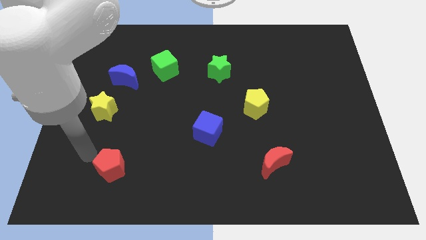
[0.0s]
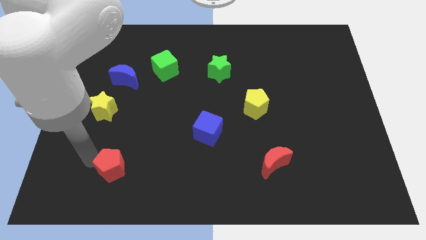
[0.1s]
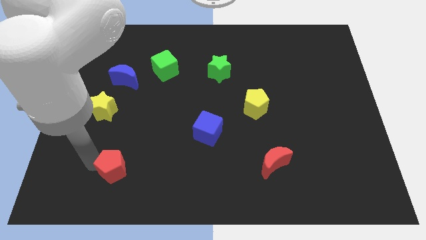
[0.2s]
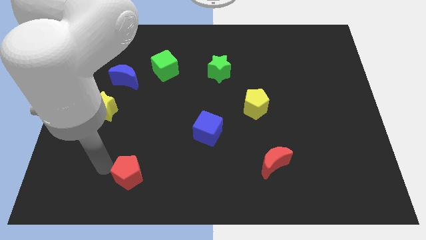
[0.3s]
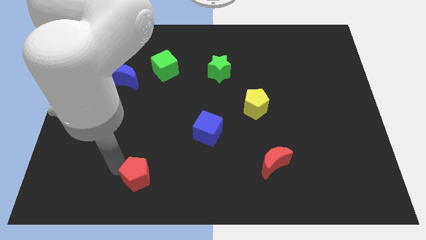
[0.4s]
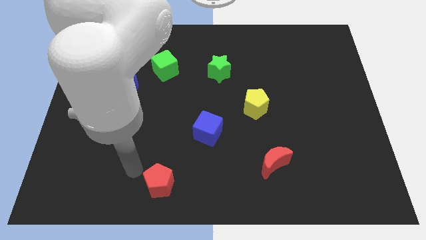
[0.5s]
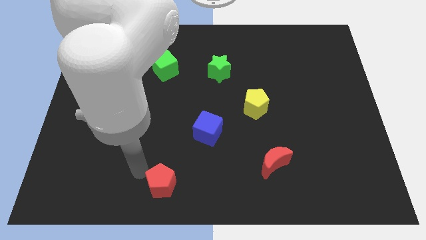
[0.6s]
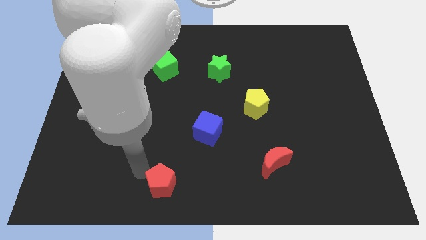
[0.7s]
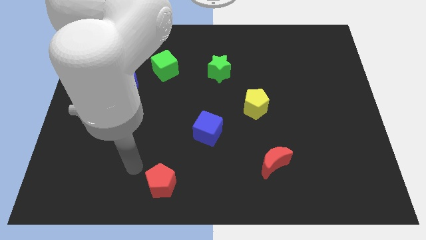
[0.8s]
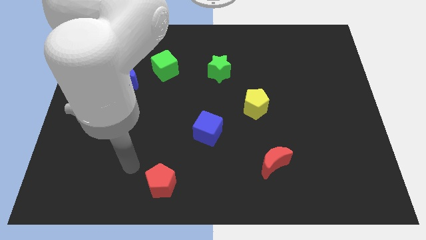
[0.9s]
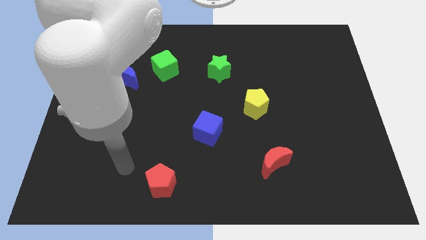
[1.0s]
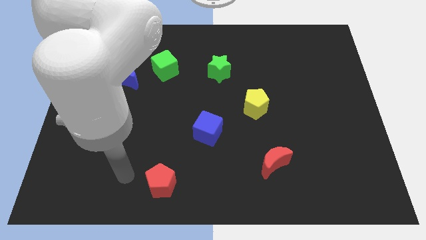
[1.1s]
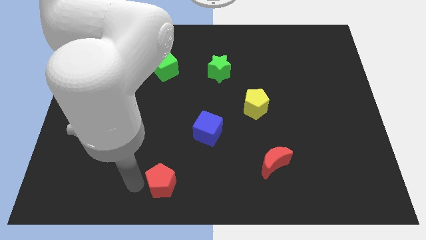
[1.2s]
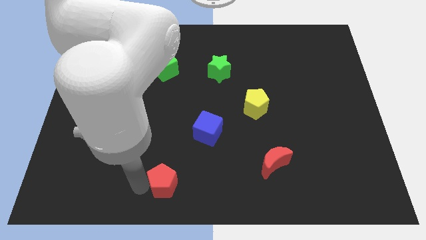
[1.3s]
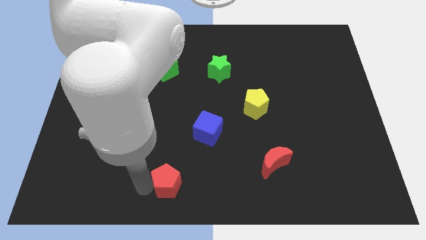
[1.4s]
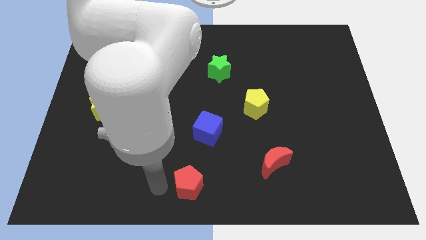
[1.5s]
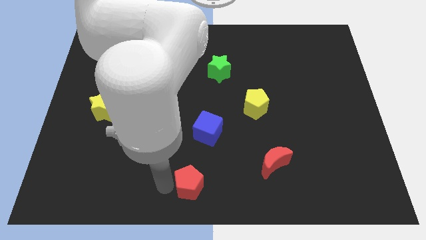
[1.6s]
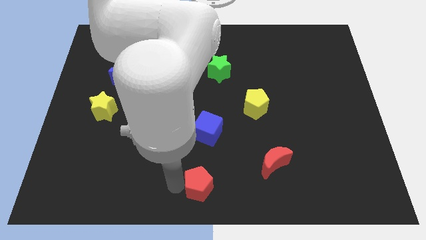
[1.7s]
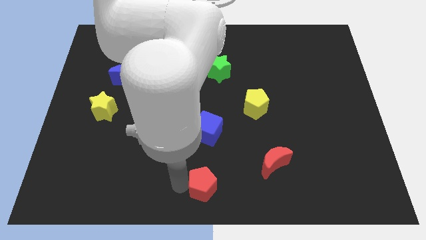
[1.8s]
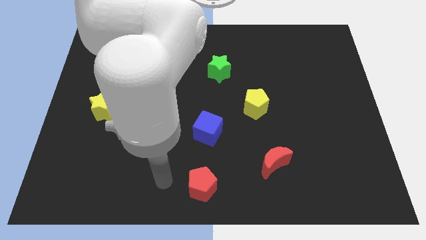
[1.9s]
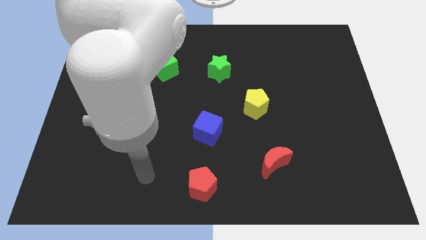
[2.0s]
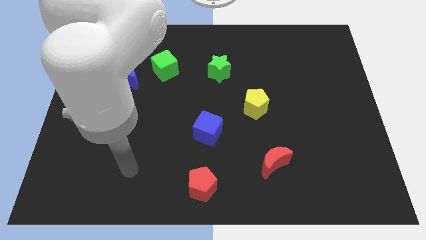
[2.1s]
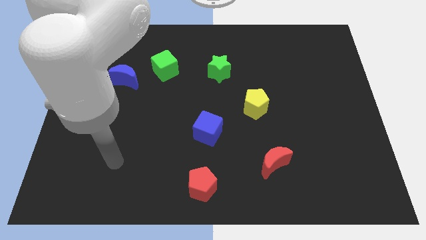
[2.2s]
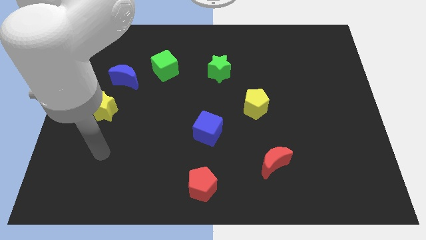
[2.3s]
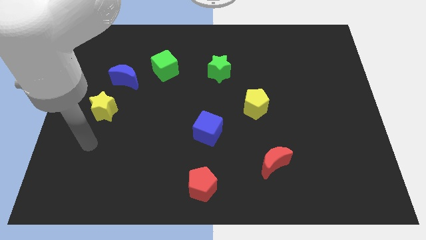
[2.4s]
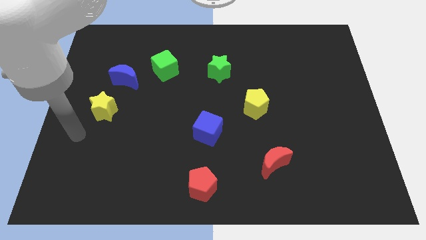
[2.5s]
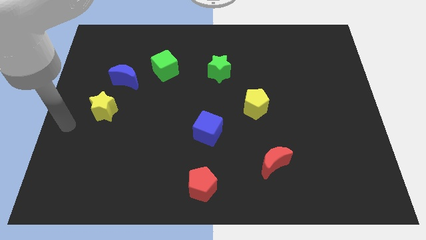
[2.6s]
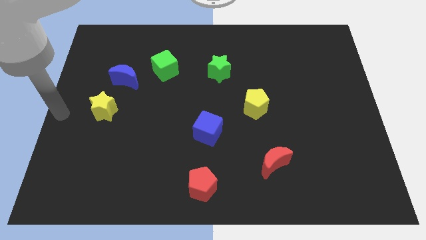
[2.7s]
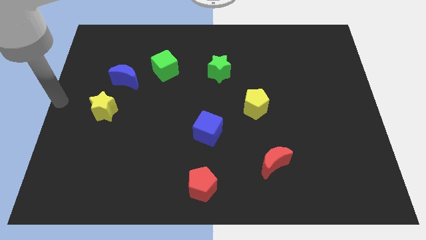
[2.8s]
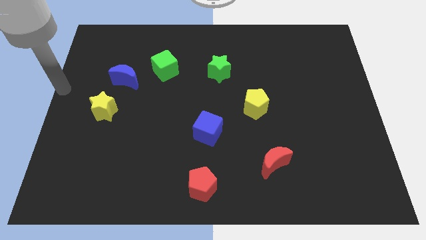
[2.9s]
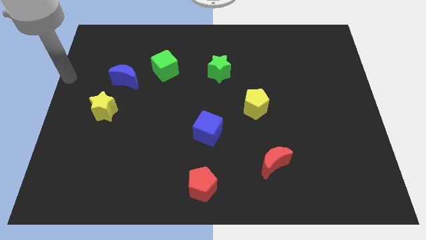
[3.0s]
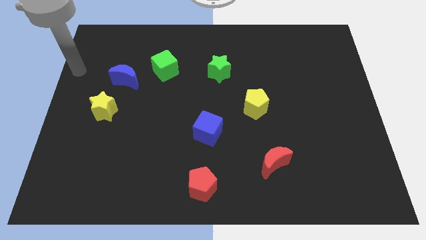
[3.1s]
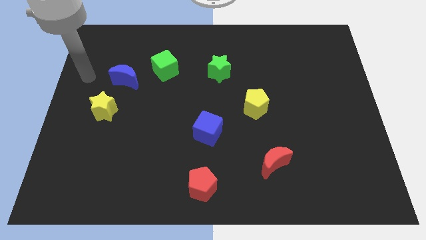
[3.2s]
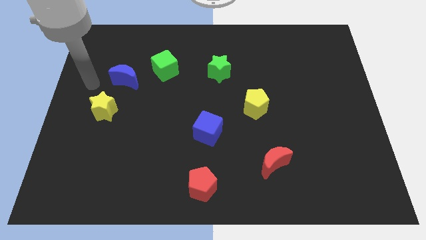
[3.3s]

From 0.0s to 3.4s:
push the red pentagon below the blue cube

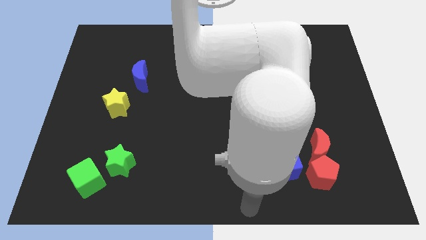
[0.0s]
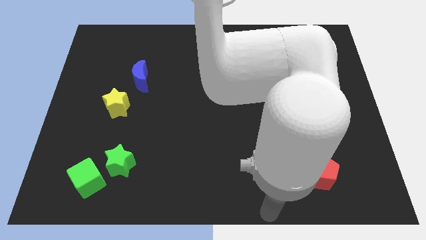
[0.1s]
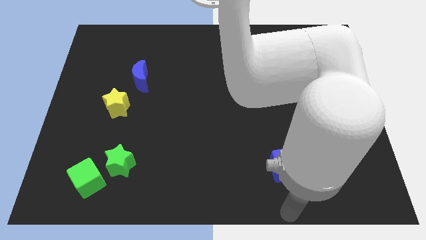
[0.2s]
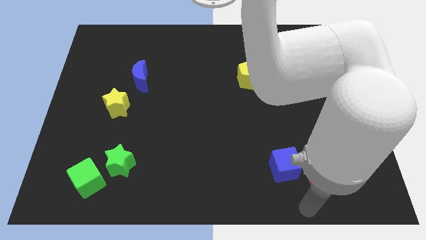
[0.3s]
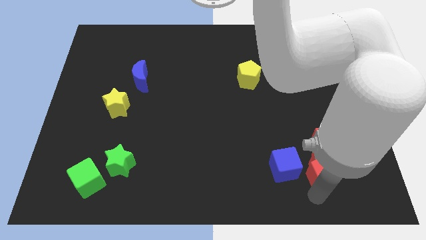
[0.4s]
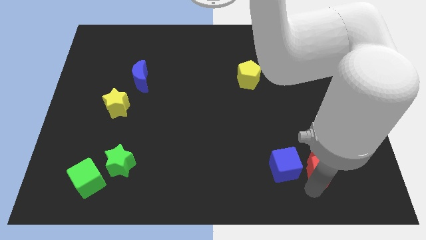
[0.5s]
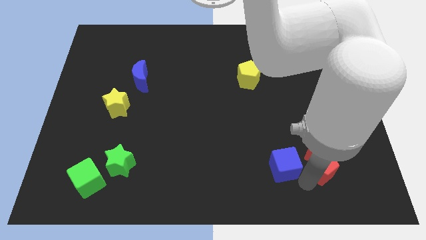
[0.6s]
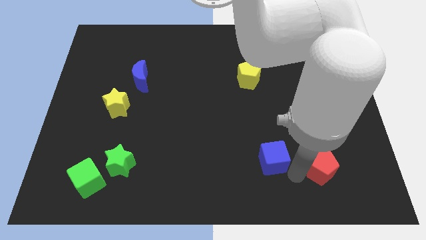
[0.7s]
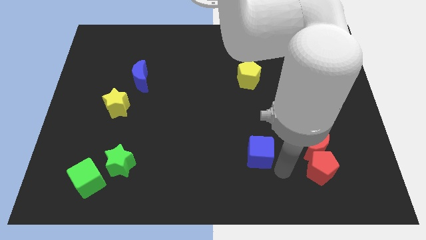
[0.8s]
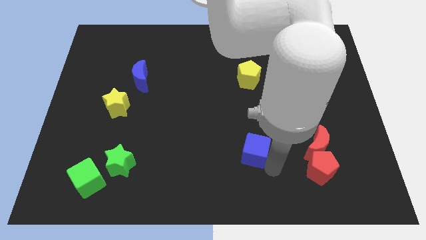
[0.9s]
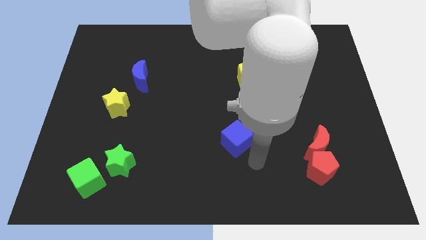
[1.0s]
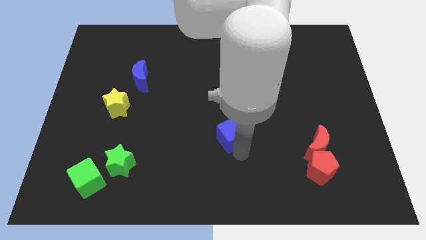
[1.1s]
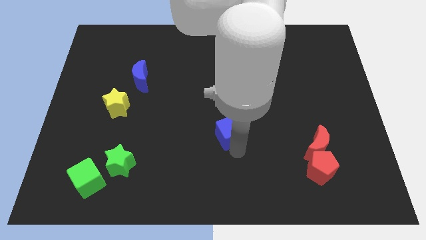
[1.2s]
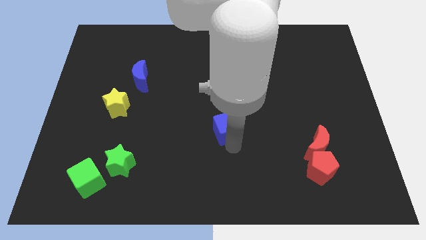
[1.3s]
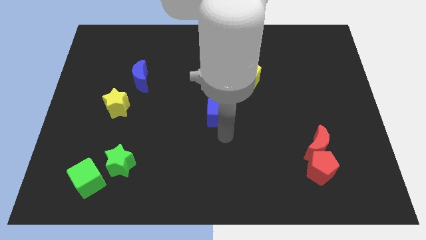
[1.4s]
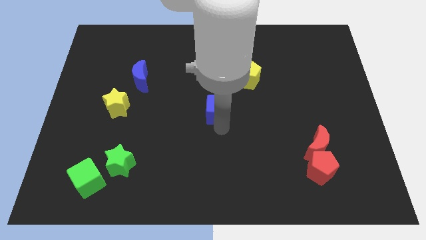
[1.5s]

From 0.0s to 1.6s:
slide the blue cube towards center

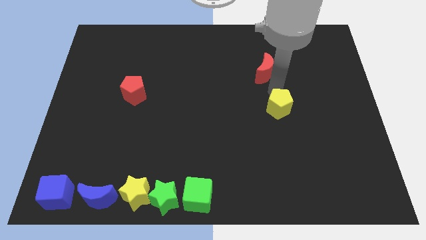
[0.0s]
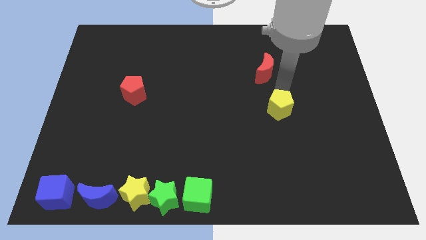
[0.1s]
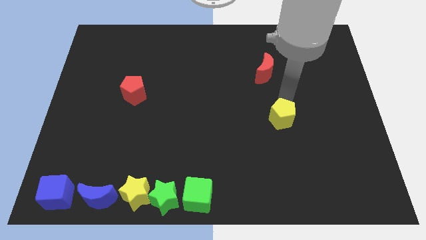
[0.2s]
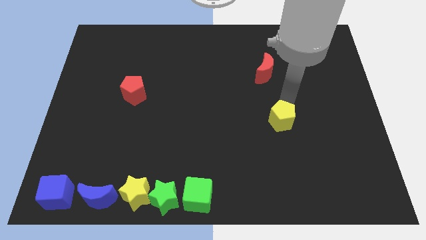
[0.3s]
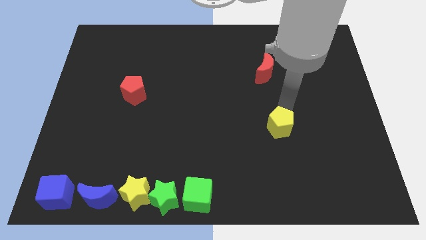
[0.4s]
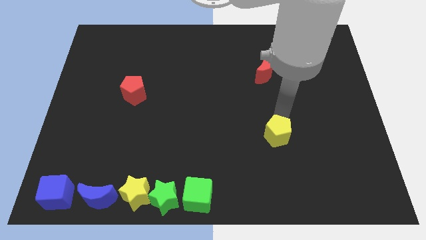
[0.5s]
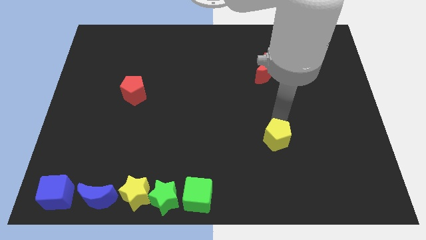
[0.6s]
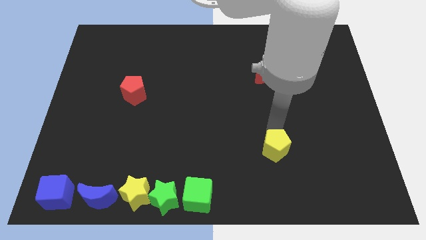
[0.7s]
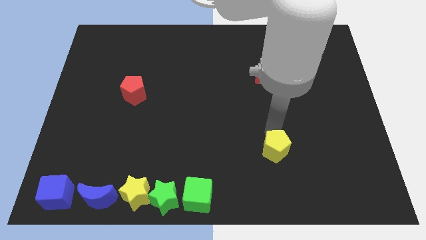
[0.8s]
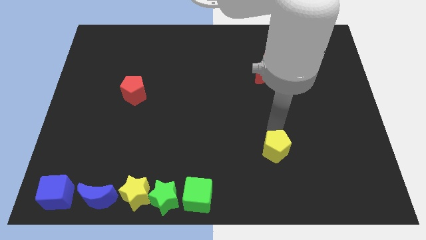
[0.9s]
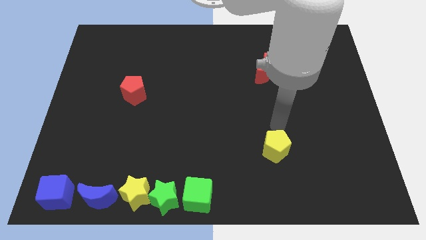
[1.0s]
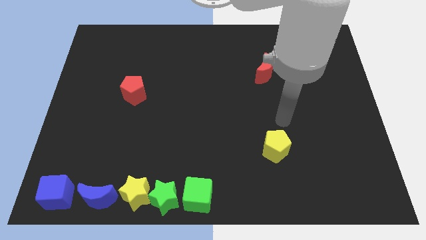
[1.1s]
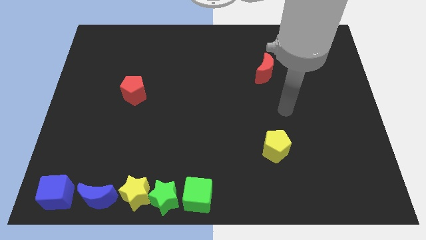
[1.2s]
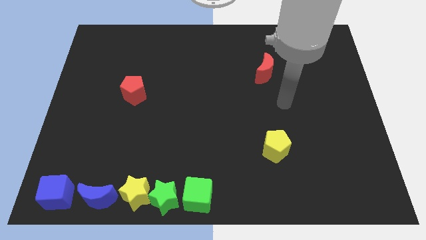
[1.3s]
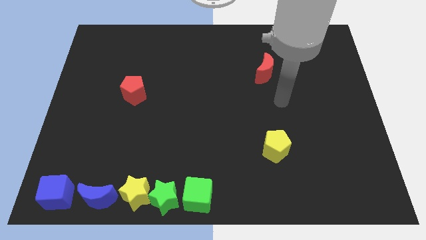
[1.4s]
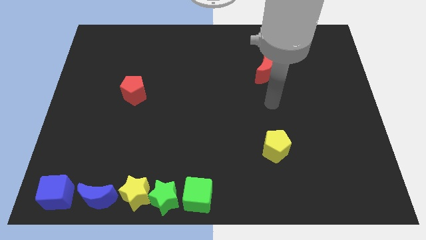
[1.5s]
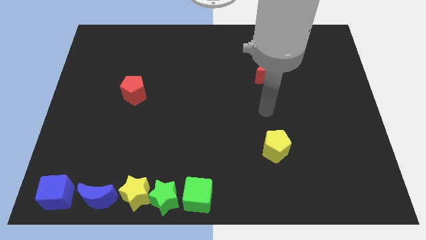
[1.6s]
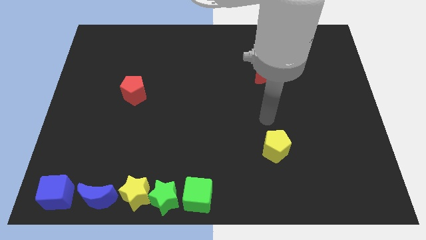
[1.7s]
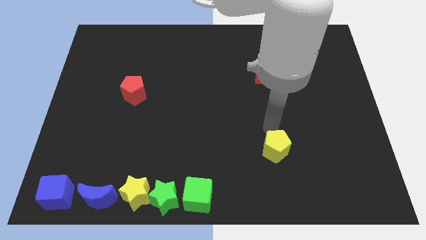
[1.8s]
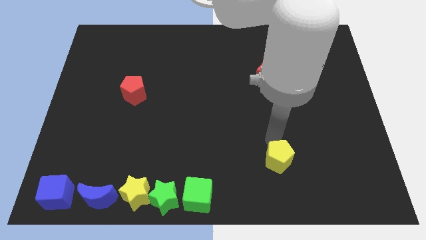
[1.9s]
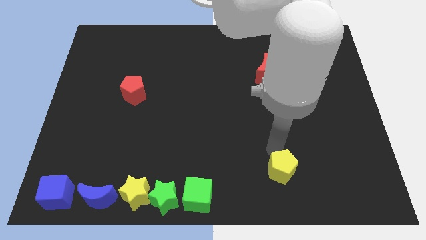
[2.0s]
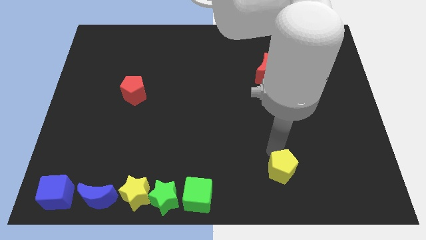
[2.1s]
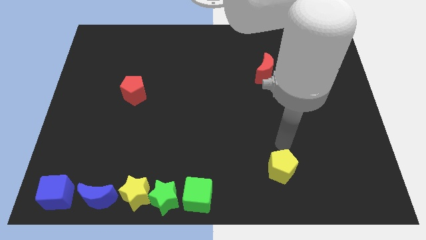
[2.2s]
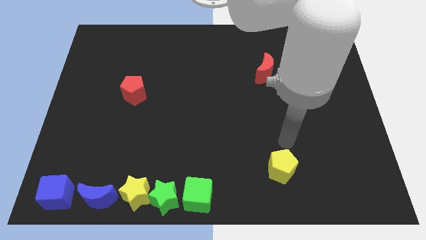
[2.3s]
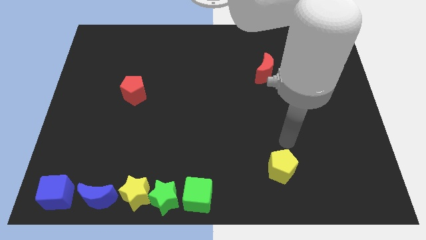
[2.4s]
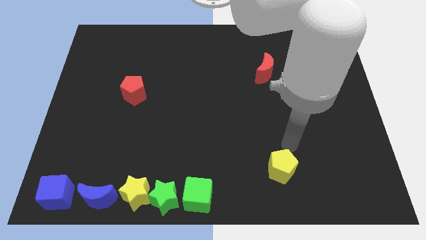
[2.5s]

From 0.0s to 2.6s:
push the yellow pentagon towards the bottom

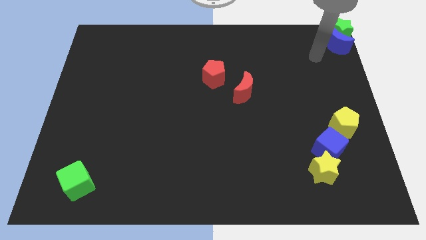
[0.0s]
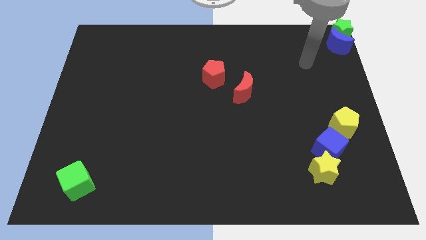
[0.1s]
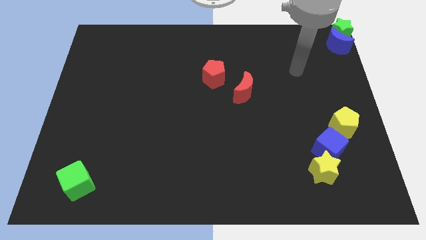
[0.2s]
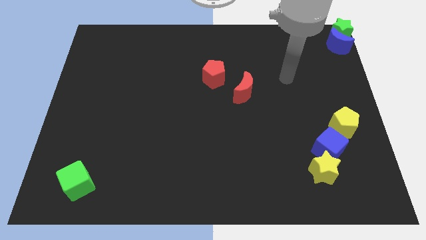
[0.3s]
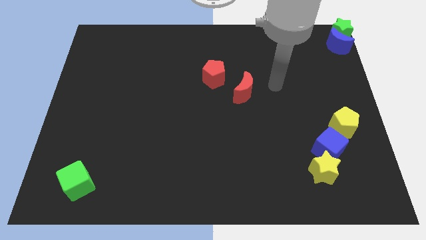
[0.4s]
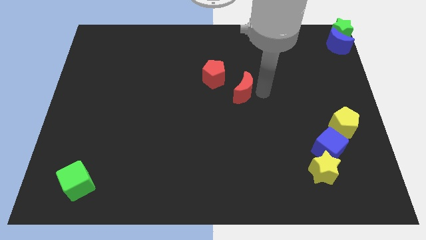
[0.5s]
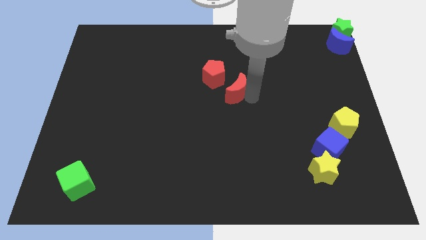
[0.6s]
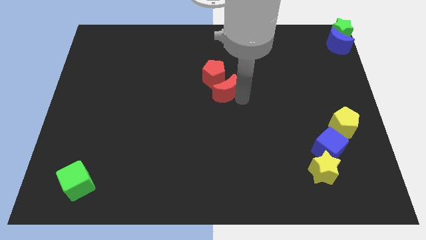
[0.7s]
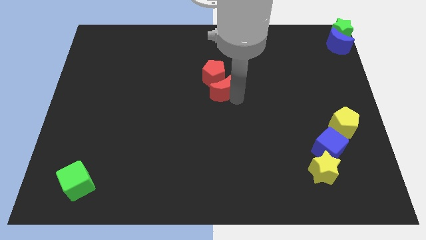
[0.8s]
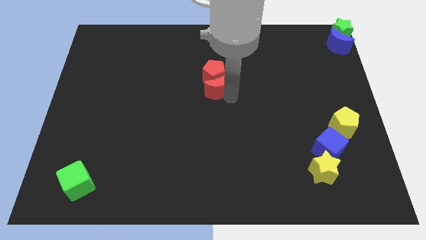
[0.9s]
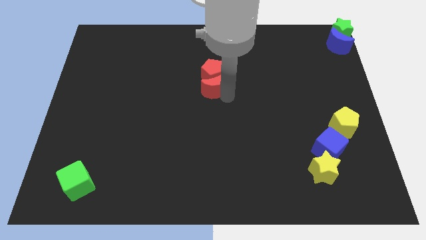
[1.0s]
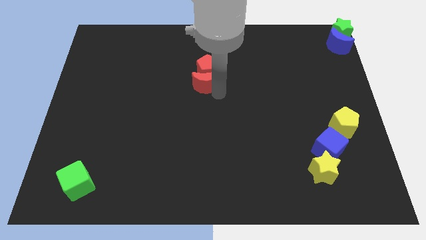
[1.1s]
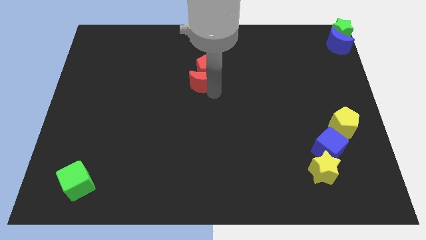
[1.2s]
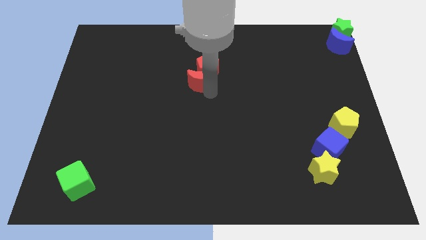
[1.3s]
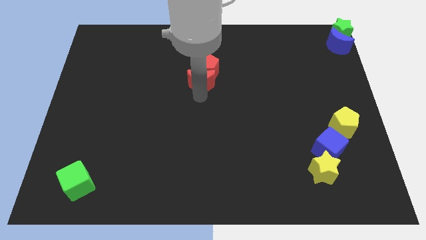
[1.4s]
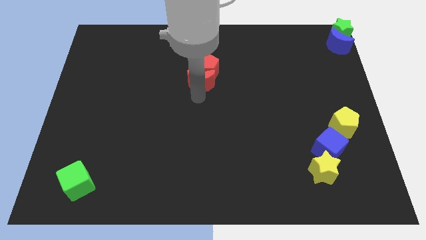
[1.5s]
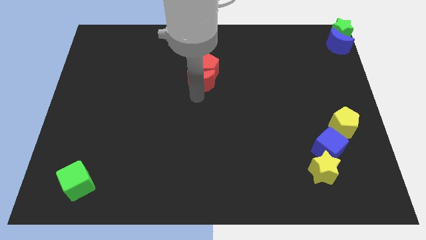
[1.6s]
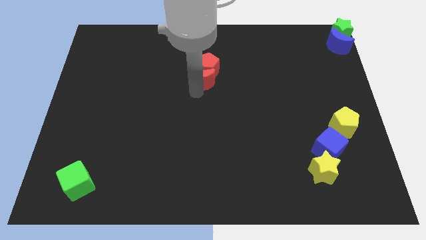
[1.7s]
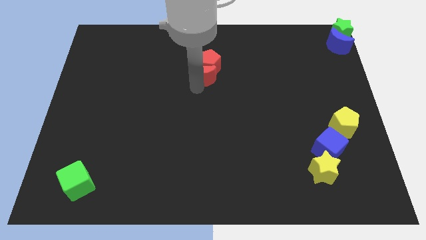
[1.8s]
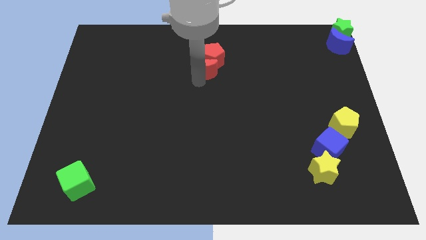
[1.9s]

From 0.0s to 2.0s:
push the red moon into the red pentagon
